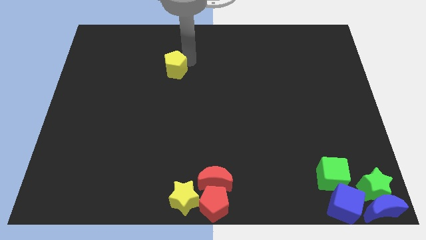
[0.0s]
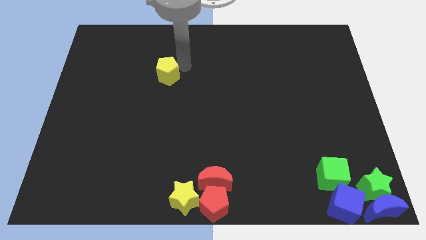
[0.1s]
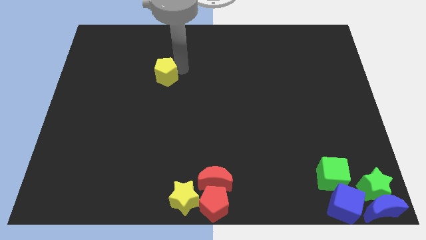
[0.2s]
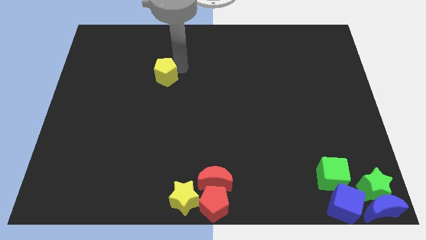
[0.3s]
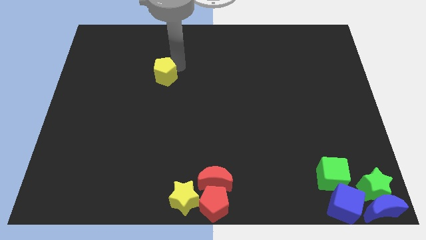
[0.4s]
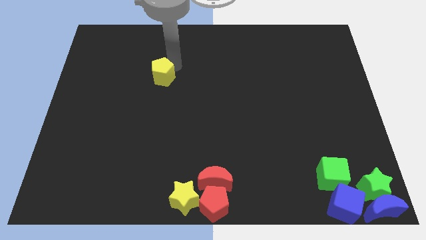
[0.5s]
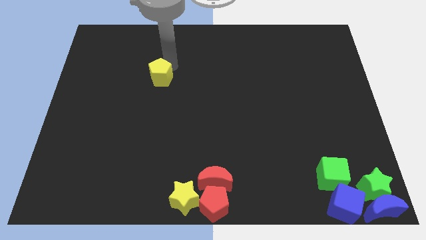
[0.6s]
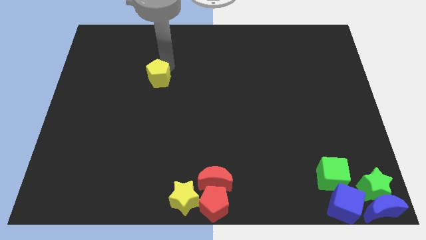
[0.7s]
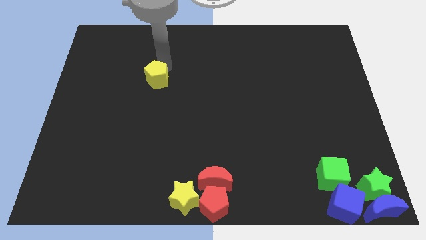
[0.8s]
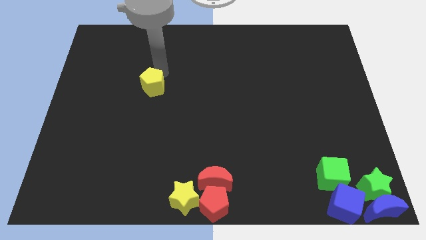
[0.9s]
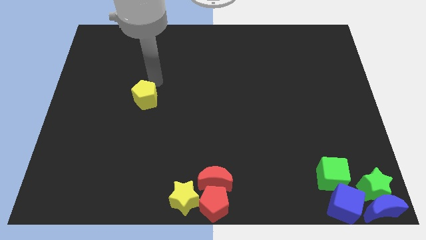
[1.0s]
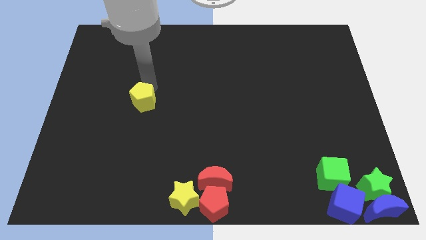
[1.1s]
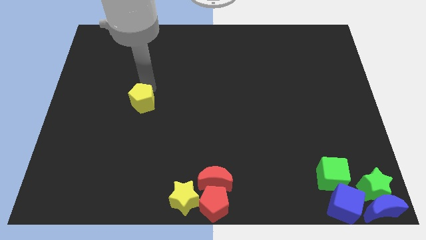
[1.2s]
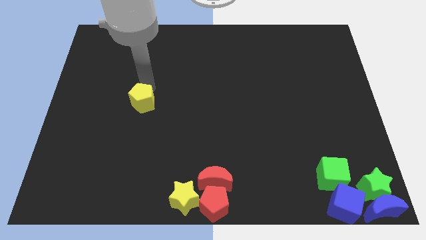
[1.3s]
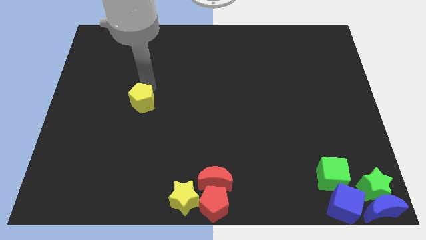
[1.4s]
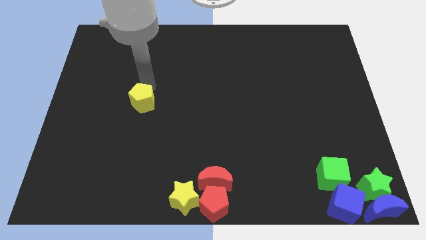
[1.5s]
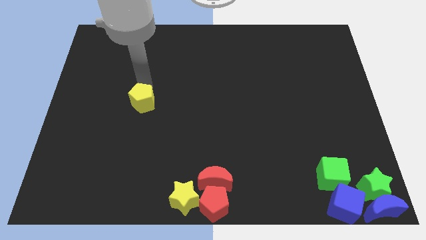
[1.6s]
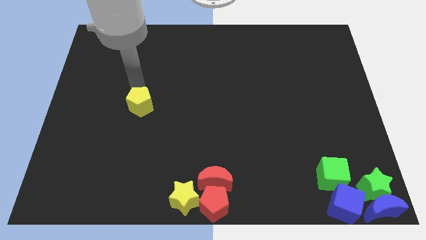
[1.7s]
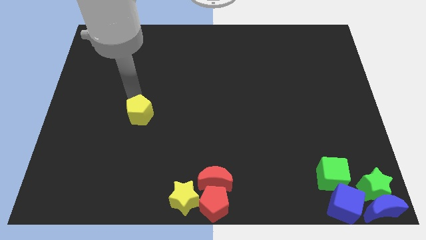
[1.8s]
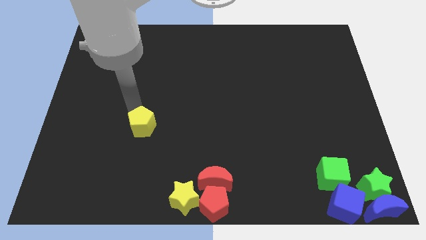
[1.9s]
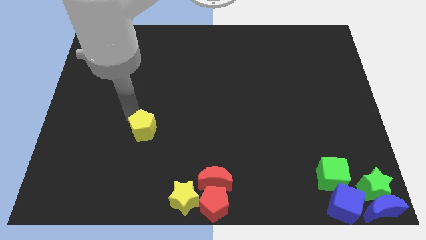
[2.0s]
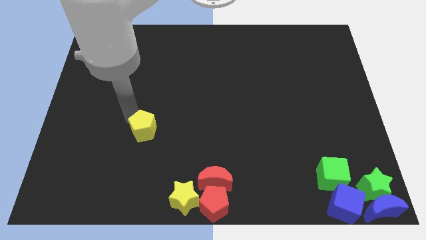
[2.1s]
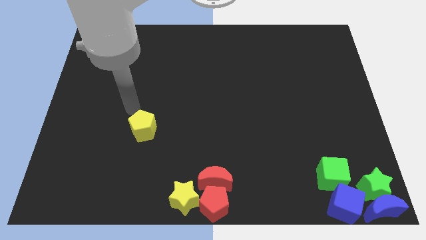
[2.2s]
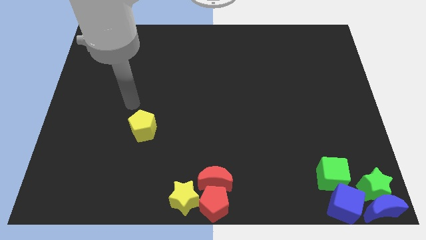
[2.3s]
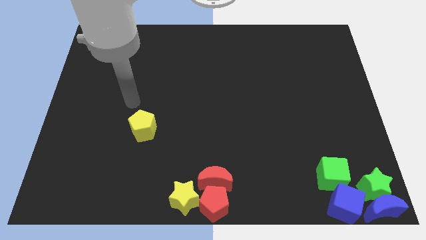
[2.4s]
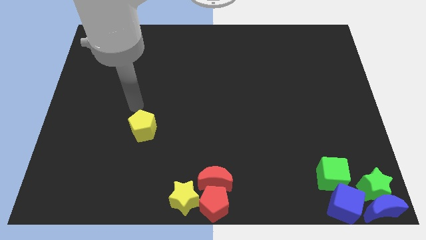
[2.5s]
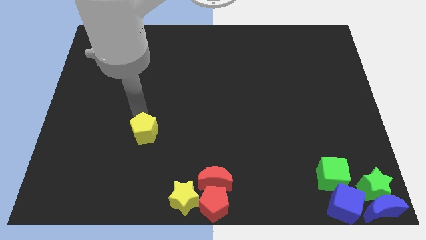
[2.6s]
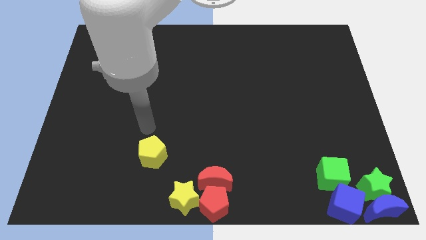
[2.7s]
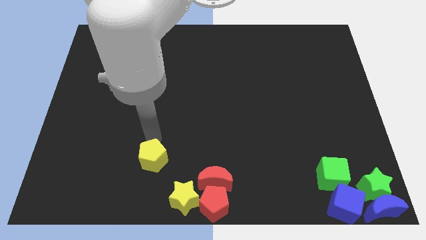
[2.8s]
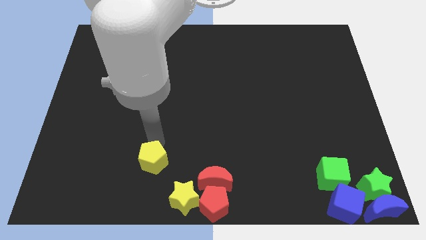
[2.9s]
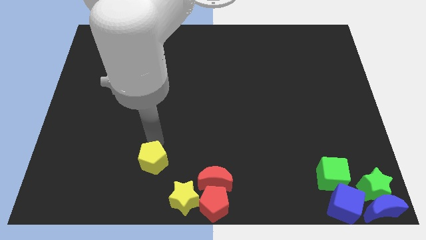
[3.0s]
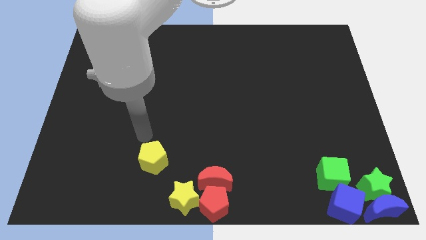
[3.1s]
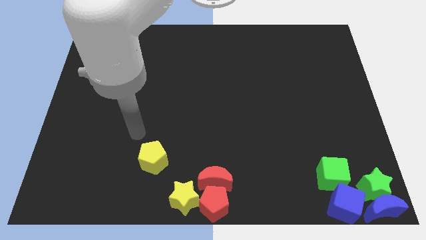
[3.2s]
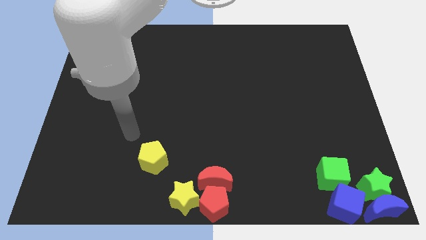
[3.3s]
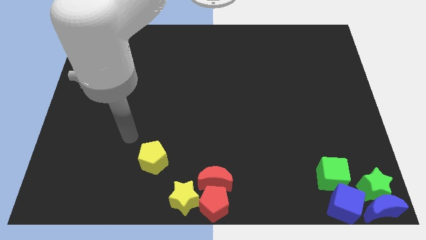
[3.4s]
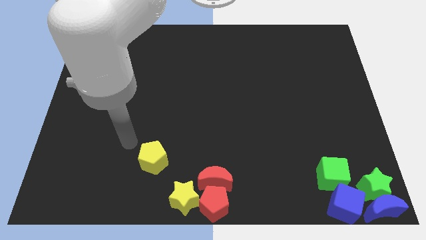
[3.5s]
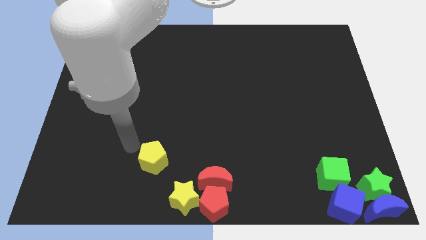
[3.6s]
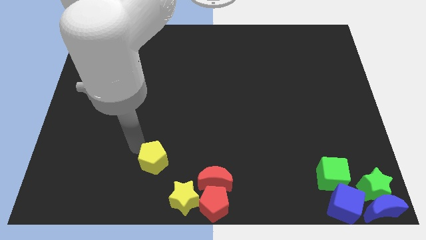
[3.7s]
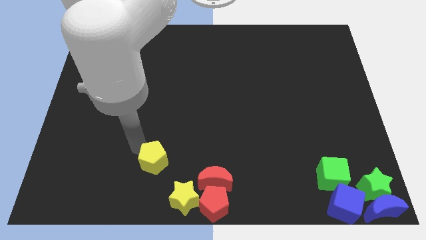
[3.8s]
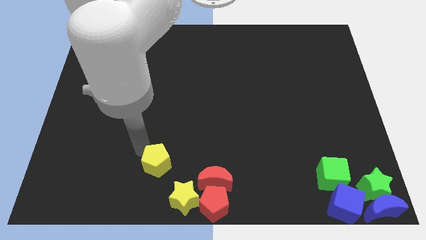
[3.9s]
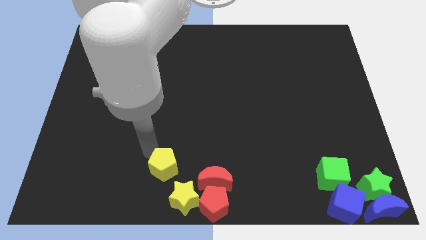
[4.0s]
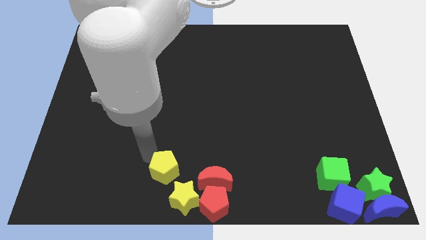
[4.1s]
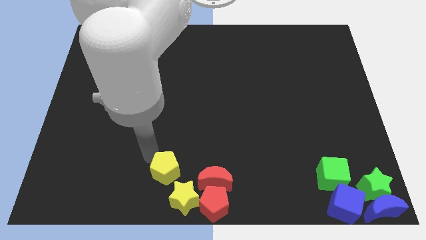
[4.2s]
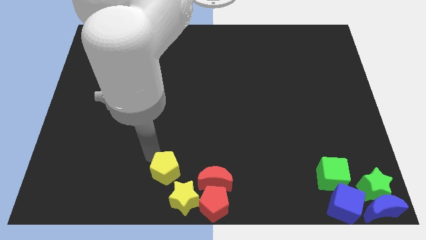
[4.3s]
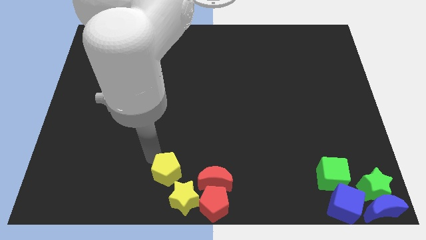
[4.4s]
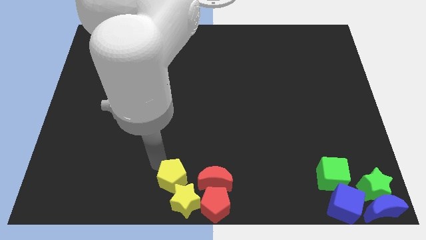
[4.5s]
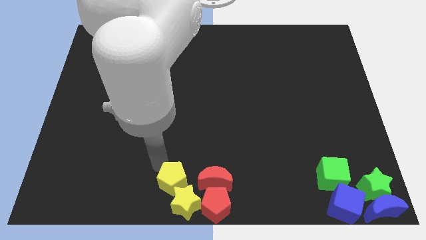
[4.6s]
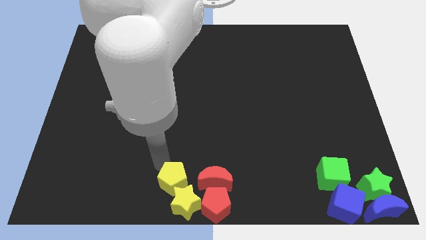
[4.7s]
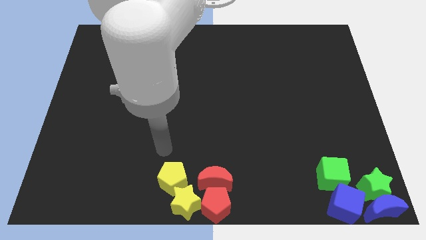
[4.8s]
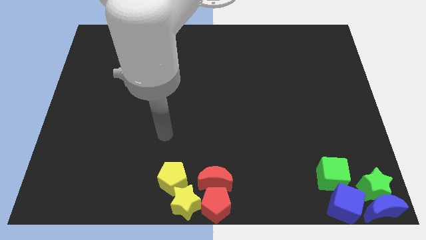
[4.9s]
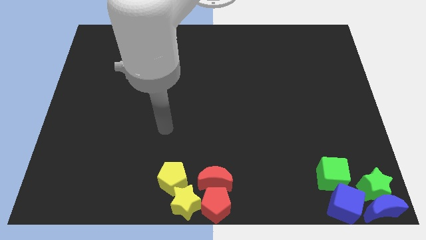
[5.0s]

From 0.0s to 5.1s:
move the yellow pentagon from top to bottom center

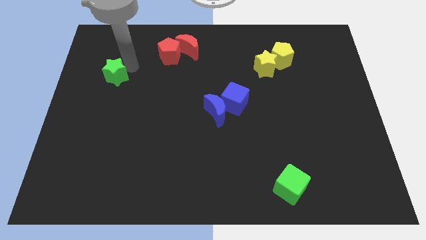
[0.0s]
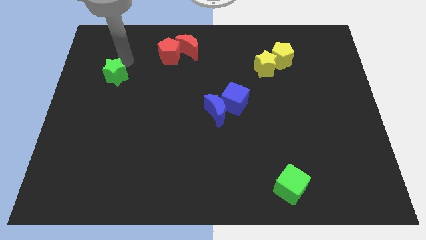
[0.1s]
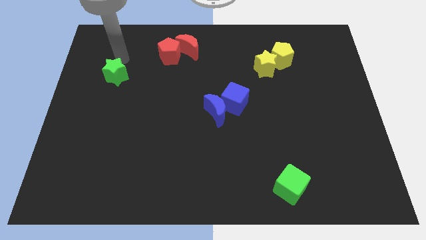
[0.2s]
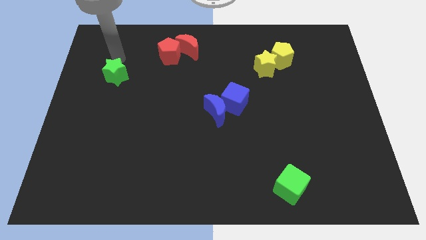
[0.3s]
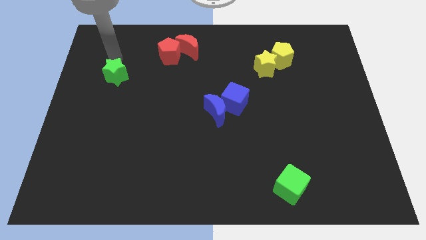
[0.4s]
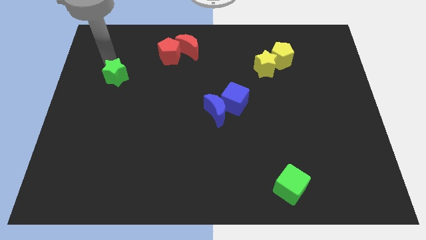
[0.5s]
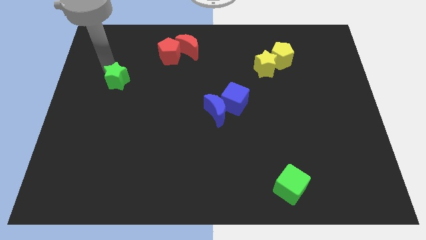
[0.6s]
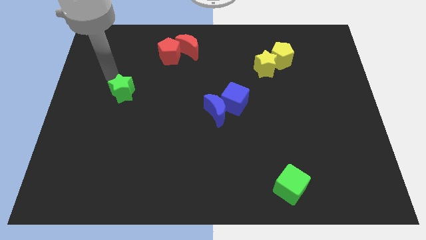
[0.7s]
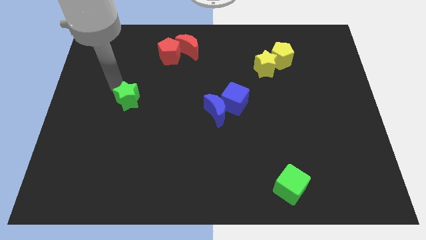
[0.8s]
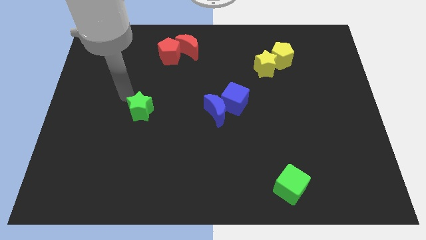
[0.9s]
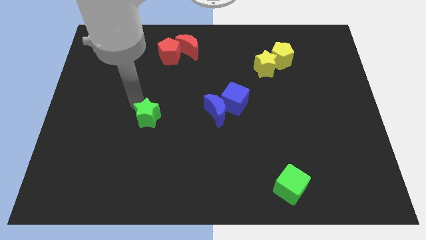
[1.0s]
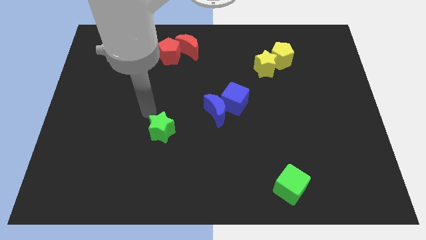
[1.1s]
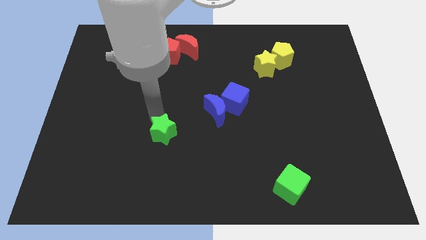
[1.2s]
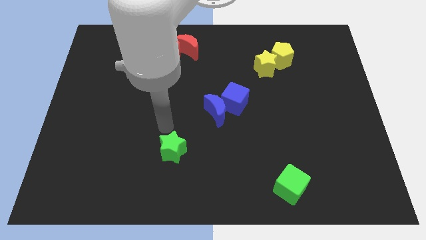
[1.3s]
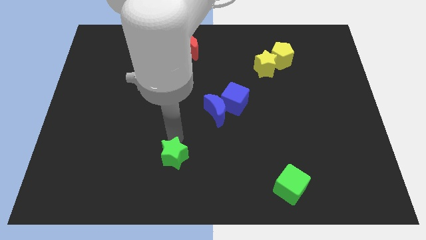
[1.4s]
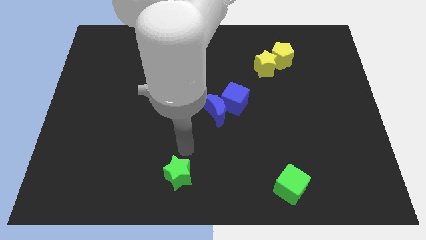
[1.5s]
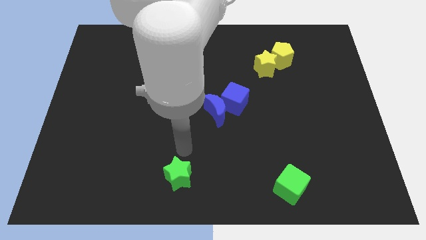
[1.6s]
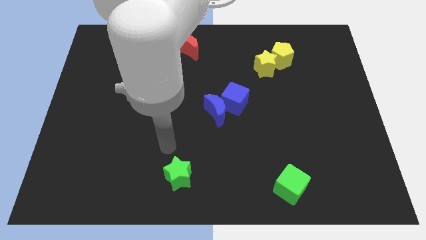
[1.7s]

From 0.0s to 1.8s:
move the green stra to the bottom center

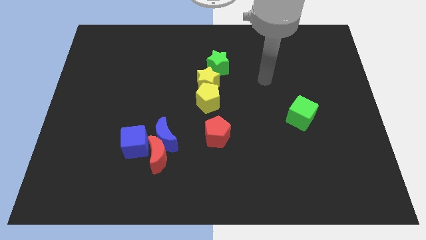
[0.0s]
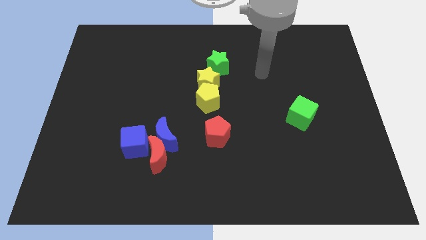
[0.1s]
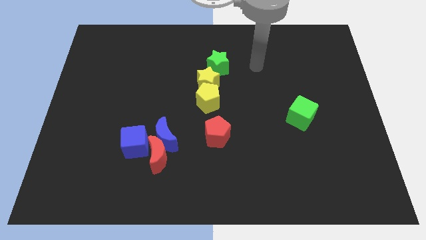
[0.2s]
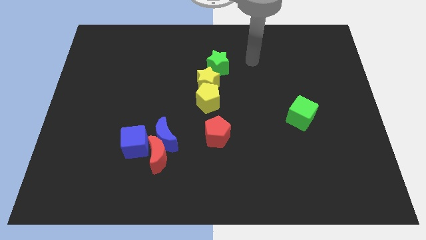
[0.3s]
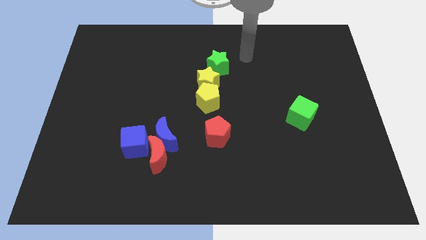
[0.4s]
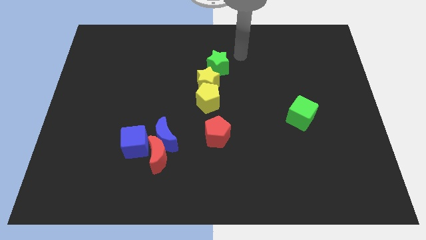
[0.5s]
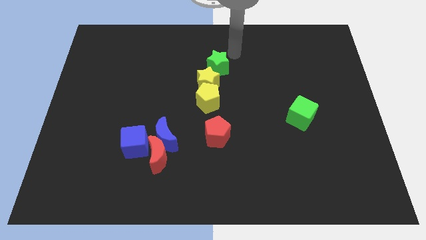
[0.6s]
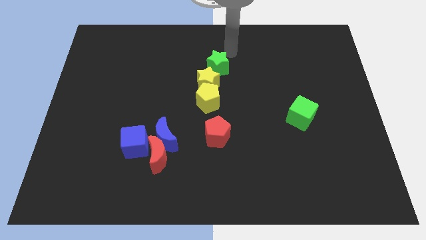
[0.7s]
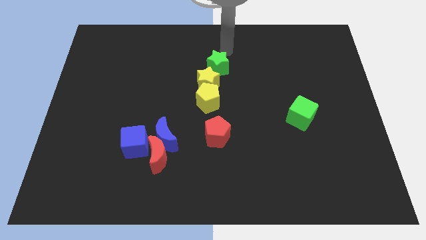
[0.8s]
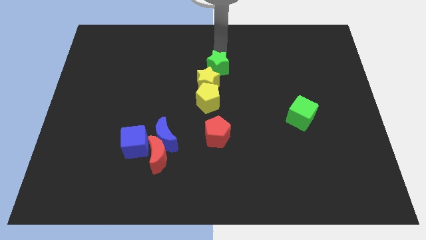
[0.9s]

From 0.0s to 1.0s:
move arm to the top of green star

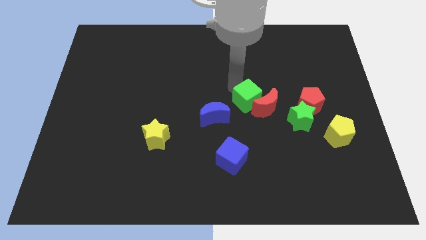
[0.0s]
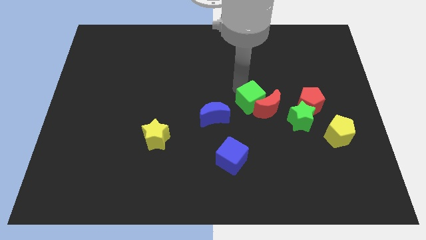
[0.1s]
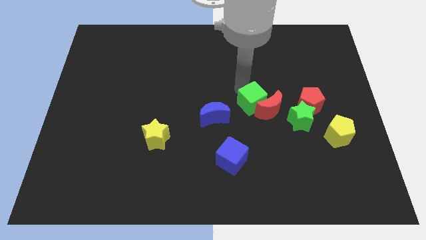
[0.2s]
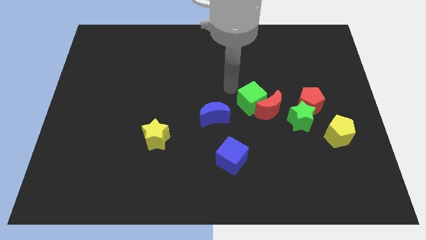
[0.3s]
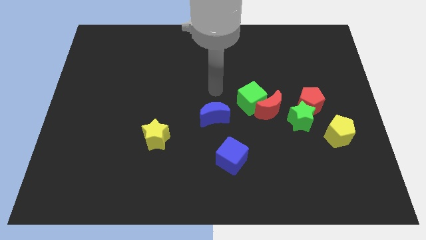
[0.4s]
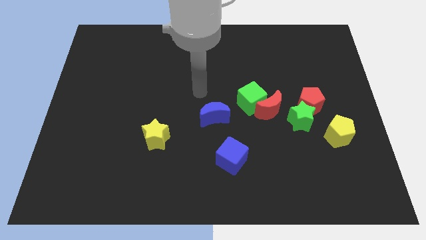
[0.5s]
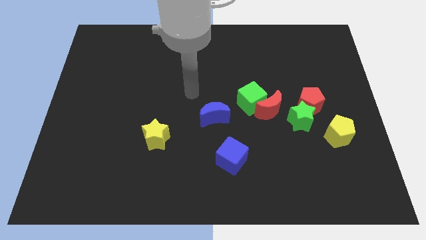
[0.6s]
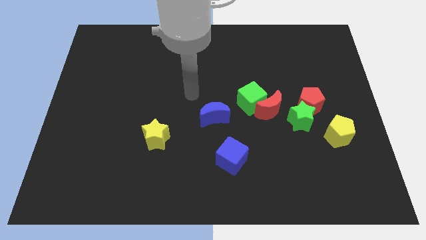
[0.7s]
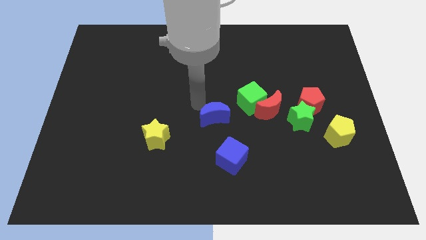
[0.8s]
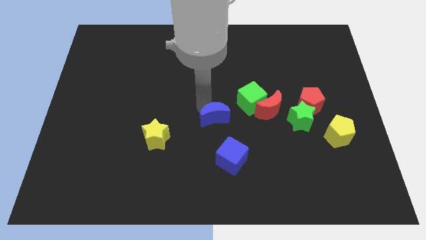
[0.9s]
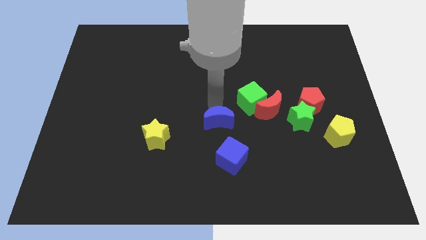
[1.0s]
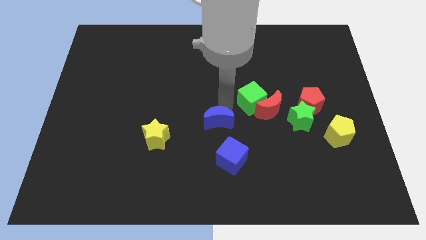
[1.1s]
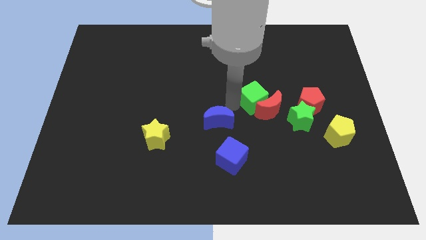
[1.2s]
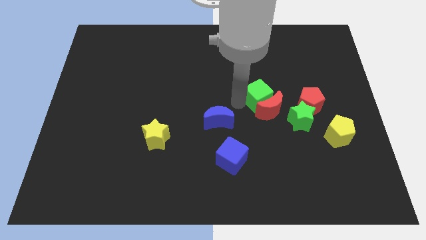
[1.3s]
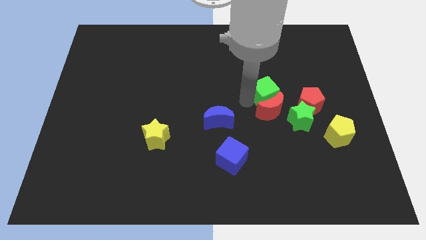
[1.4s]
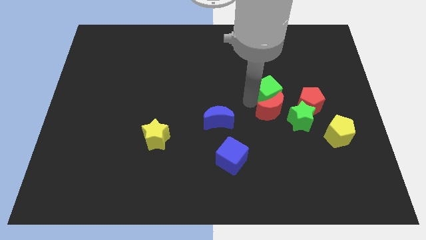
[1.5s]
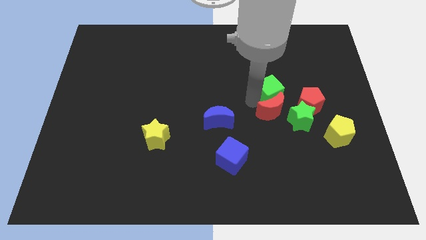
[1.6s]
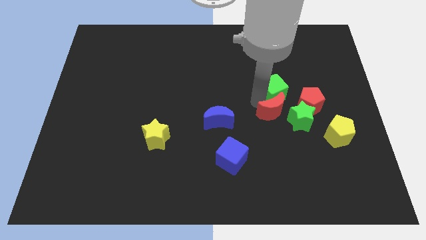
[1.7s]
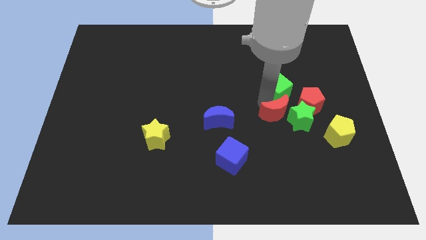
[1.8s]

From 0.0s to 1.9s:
move the green cube vertically above the red crescent
